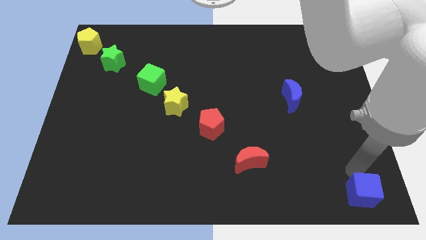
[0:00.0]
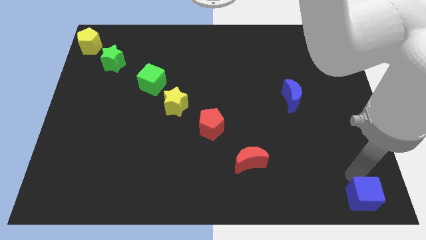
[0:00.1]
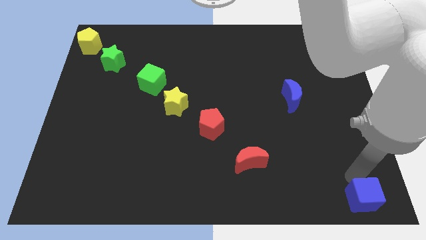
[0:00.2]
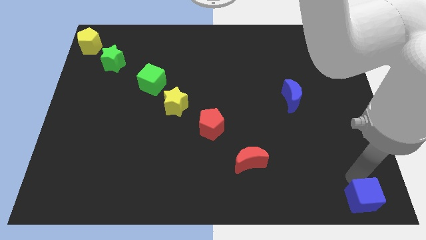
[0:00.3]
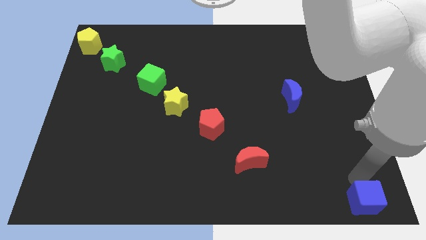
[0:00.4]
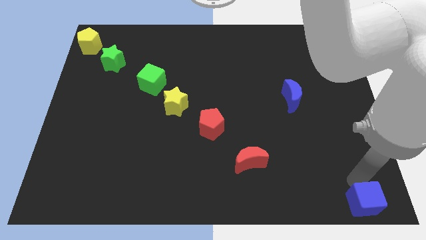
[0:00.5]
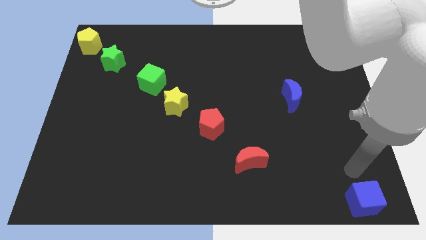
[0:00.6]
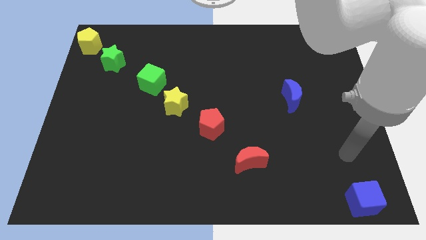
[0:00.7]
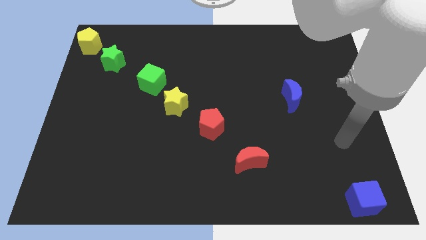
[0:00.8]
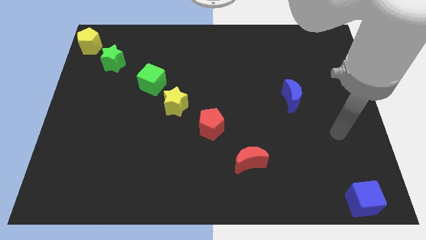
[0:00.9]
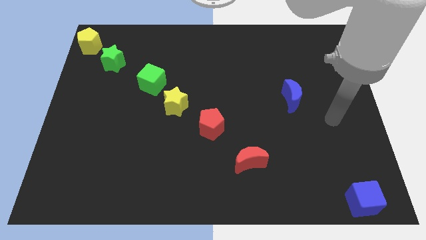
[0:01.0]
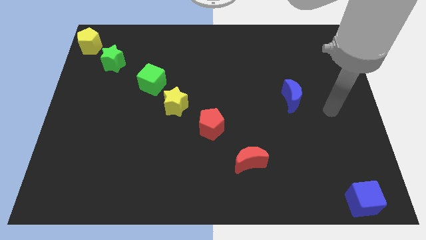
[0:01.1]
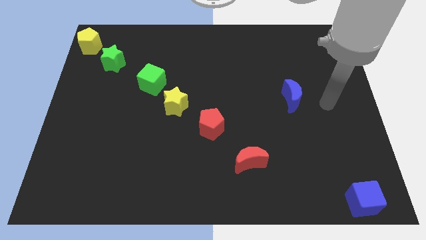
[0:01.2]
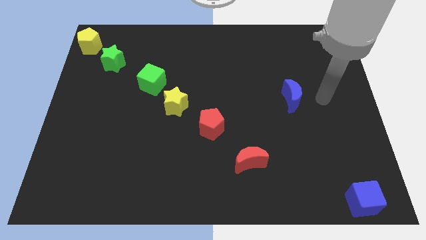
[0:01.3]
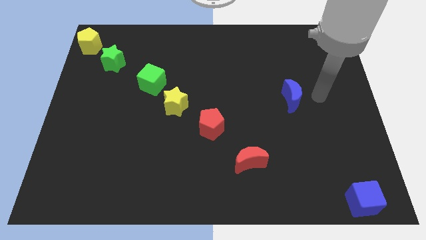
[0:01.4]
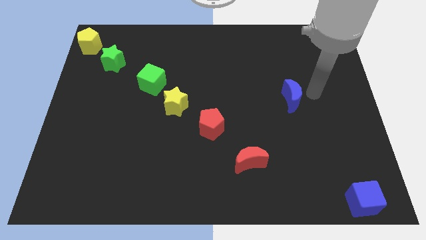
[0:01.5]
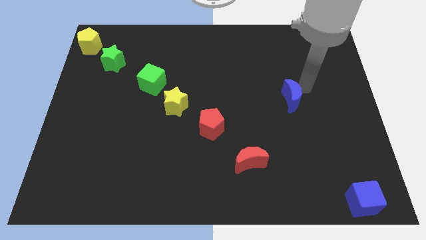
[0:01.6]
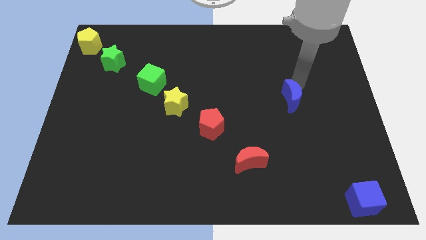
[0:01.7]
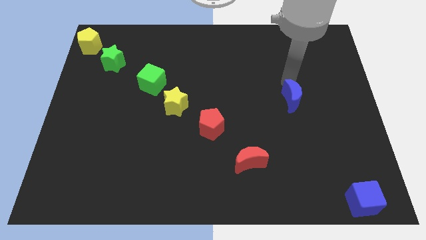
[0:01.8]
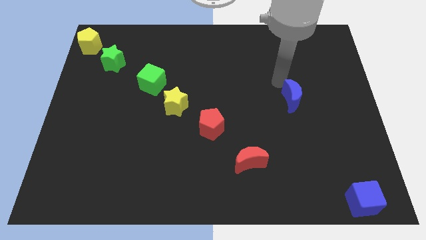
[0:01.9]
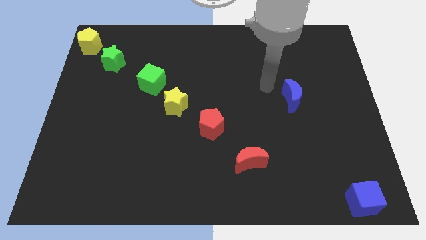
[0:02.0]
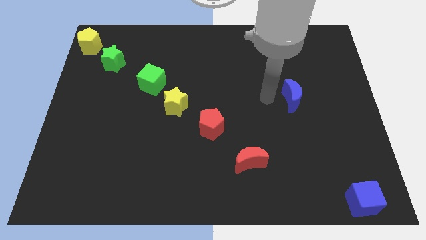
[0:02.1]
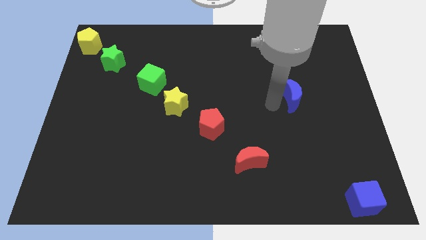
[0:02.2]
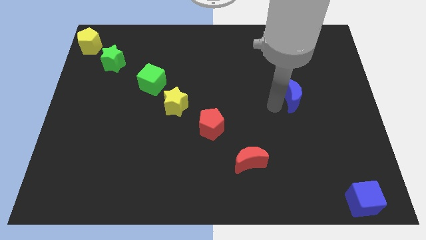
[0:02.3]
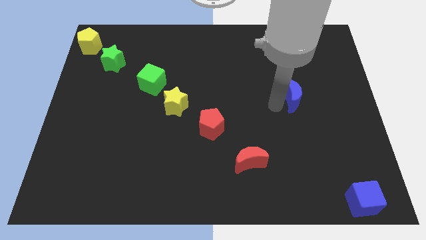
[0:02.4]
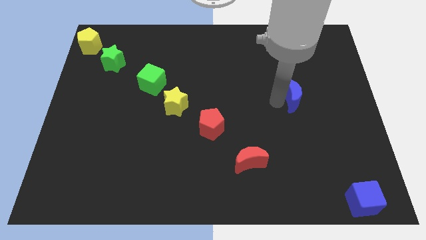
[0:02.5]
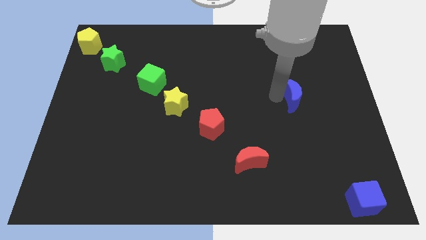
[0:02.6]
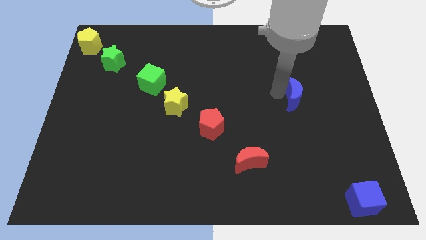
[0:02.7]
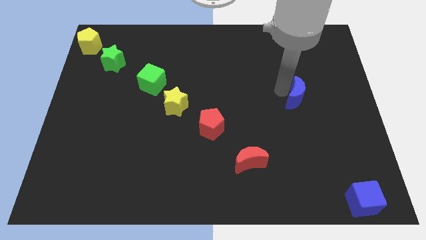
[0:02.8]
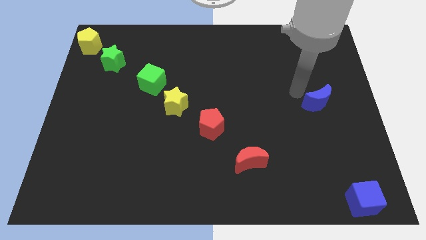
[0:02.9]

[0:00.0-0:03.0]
move your arm to the blue moon

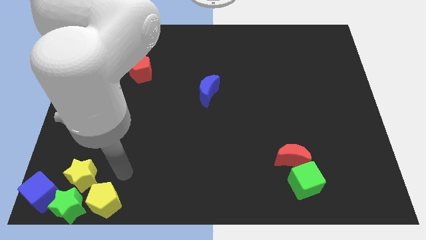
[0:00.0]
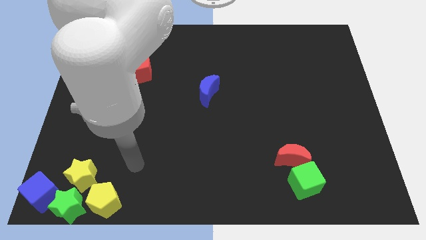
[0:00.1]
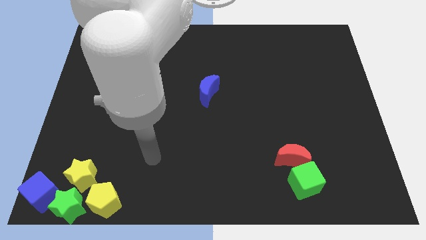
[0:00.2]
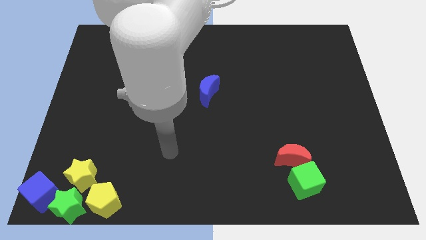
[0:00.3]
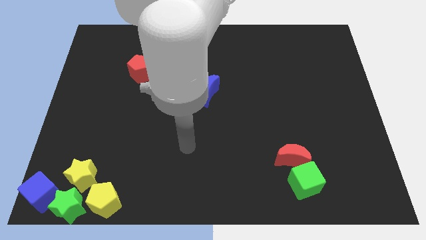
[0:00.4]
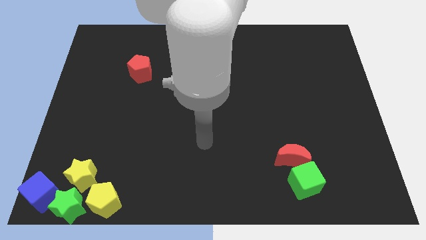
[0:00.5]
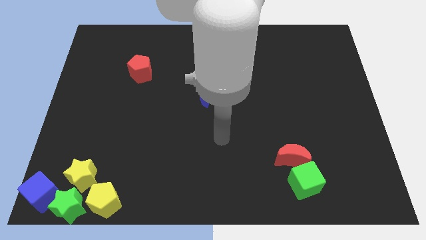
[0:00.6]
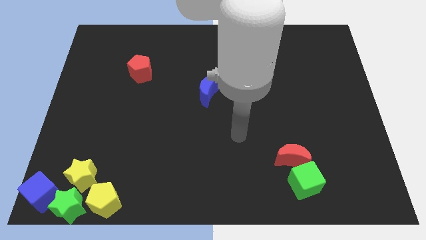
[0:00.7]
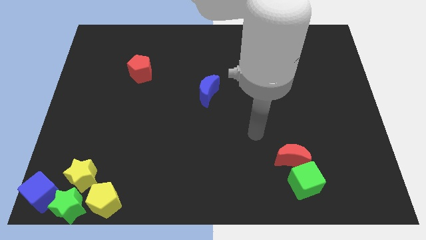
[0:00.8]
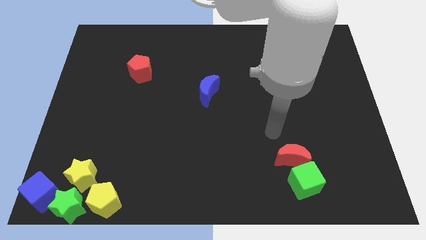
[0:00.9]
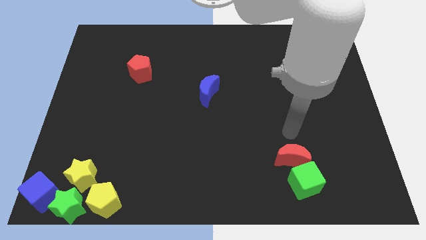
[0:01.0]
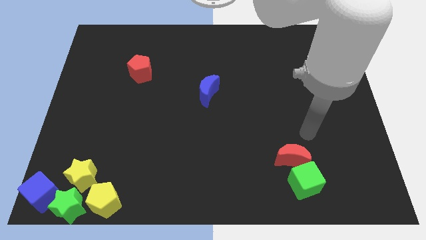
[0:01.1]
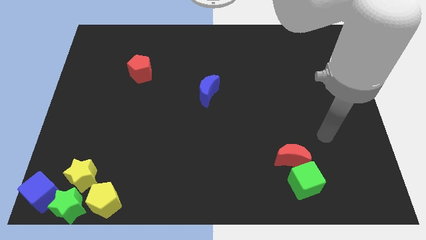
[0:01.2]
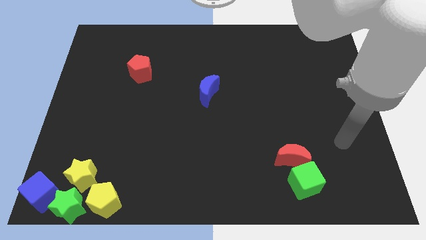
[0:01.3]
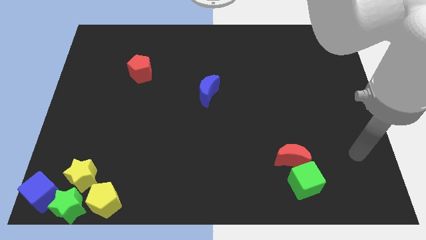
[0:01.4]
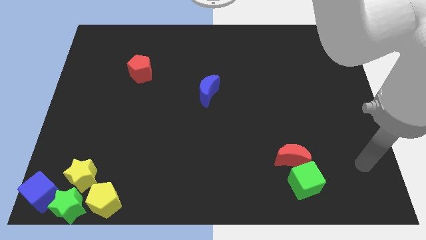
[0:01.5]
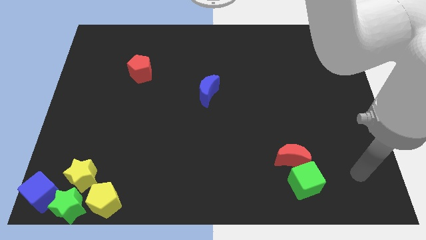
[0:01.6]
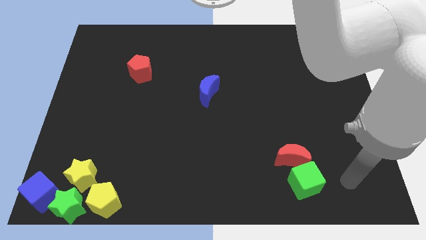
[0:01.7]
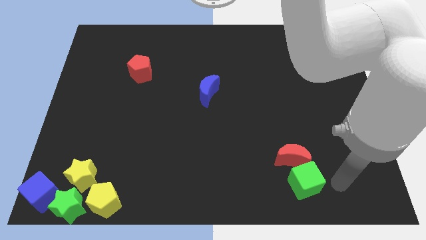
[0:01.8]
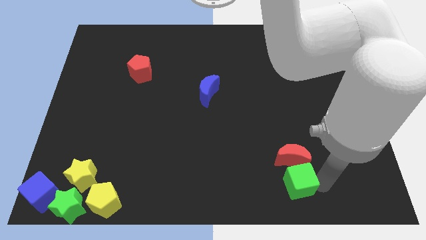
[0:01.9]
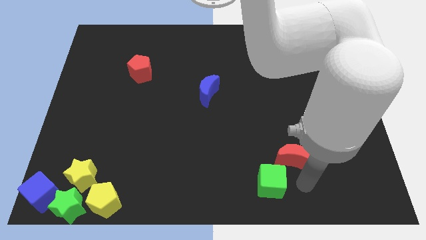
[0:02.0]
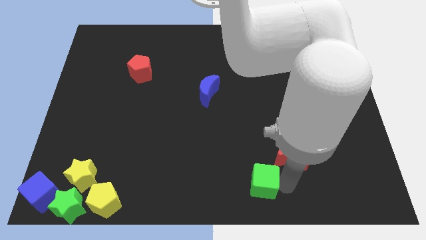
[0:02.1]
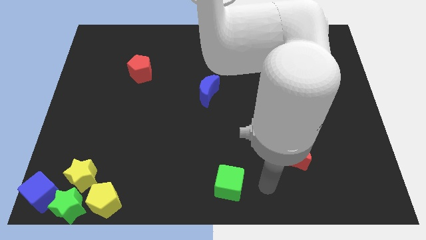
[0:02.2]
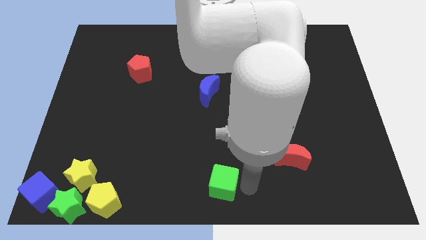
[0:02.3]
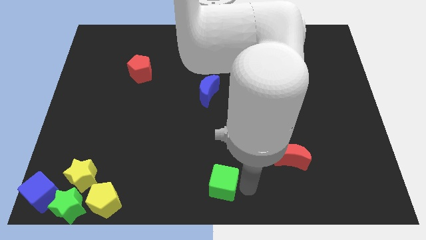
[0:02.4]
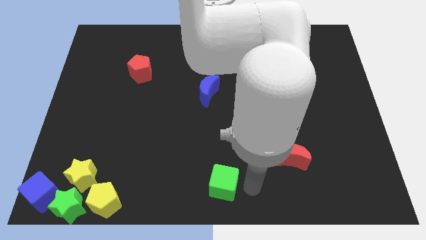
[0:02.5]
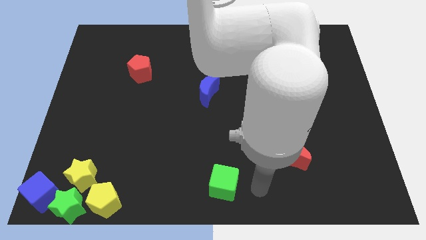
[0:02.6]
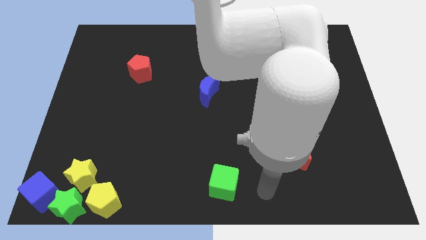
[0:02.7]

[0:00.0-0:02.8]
push the green cube to the bottom center of the board

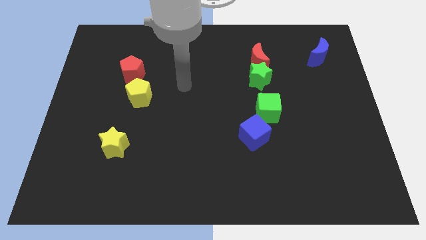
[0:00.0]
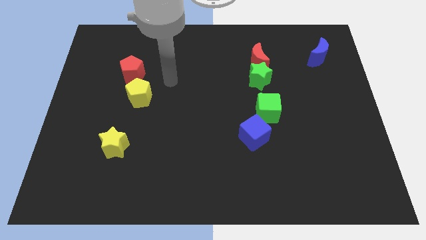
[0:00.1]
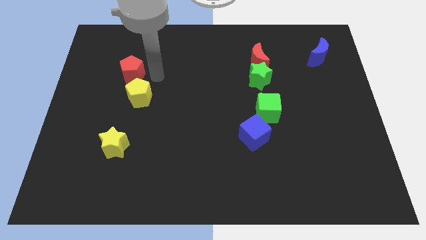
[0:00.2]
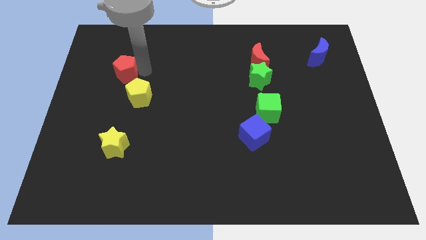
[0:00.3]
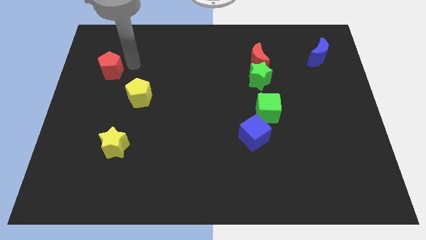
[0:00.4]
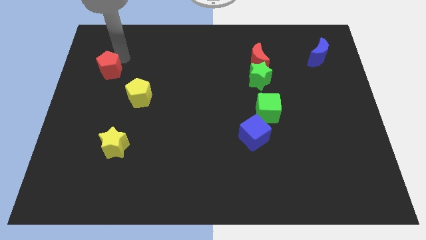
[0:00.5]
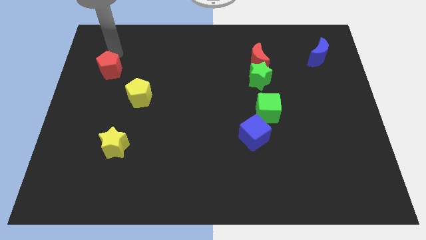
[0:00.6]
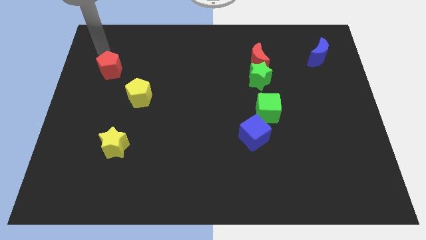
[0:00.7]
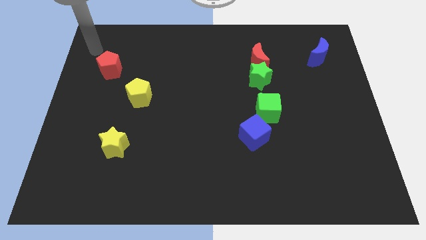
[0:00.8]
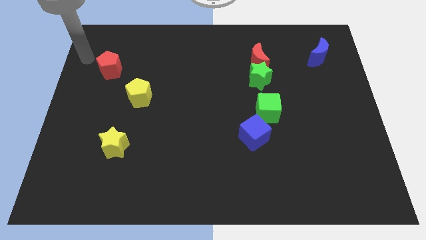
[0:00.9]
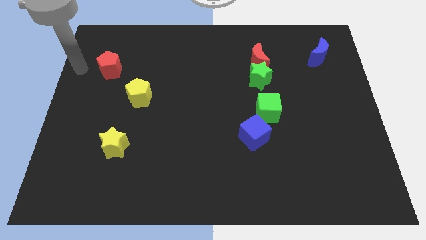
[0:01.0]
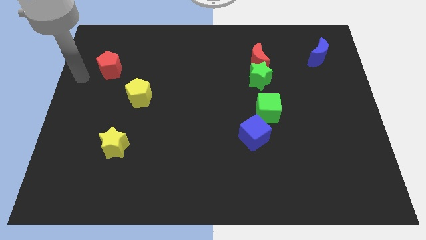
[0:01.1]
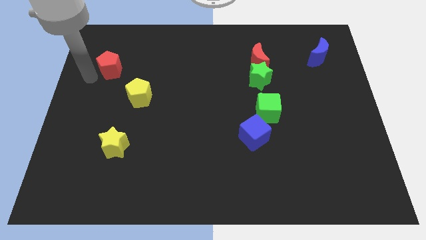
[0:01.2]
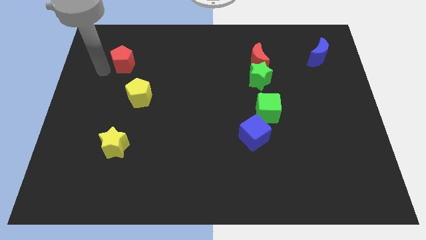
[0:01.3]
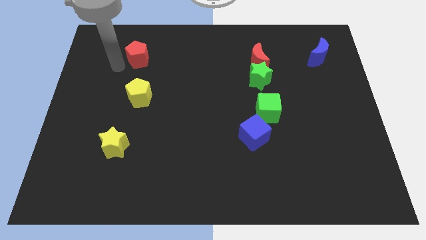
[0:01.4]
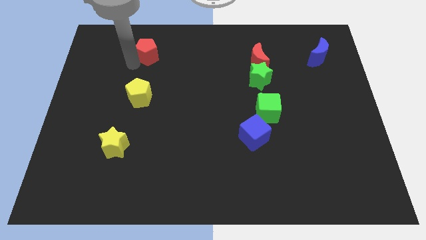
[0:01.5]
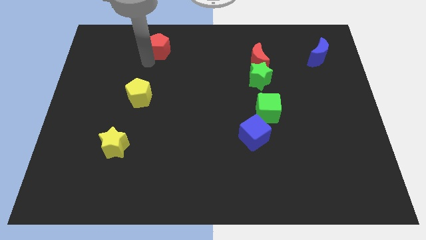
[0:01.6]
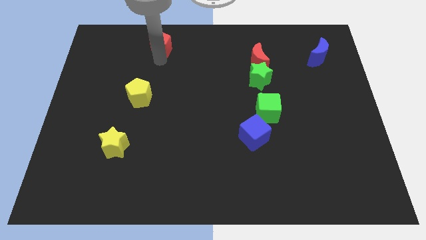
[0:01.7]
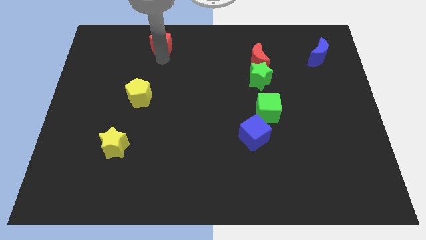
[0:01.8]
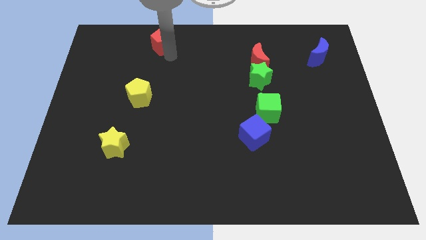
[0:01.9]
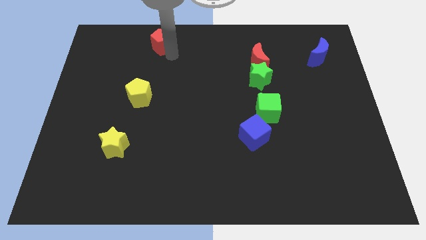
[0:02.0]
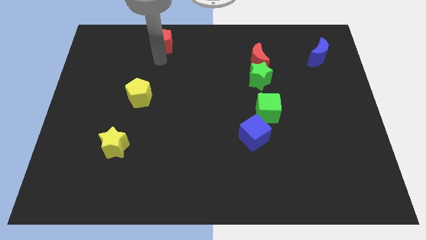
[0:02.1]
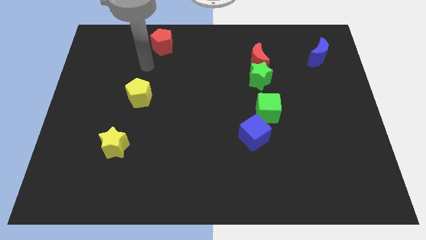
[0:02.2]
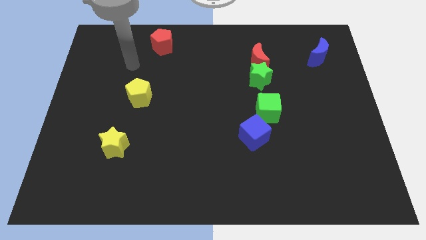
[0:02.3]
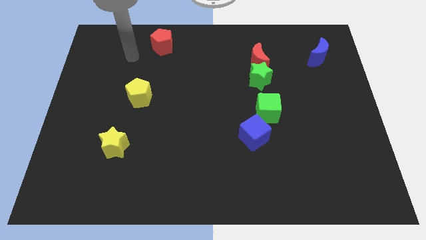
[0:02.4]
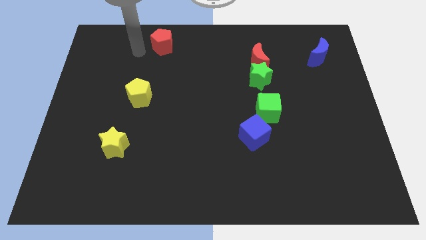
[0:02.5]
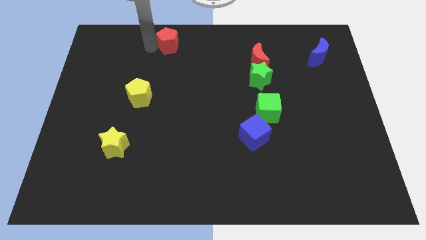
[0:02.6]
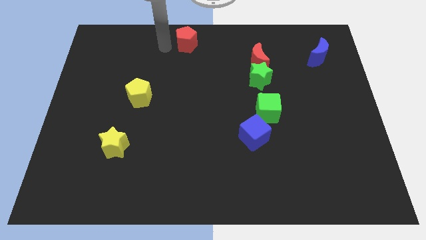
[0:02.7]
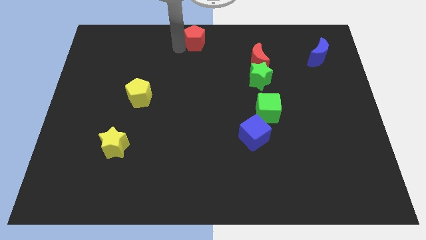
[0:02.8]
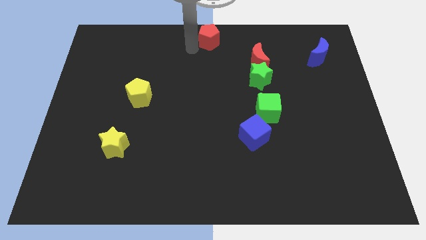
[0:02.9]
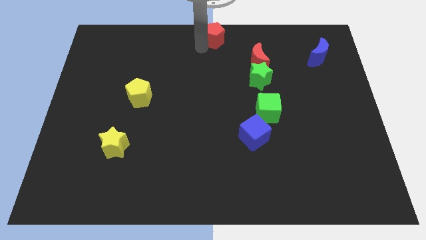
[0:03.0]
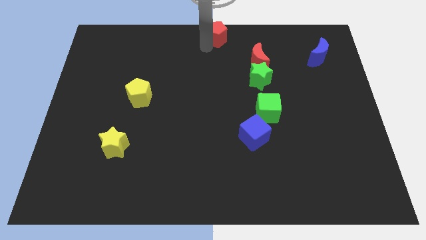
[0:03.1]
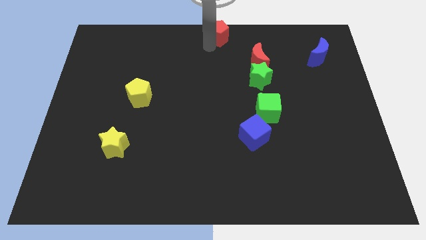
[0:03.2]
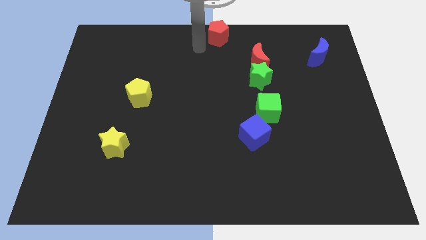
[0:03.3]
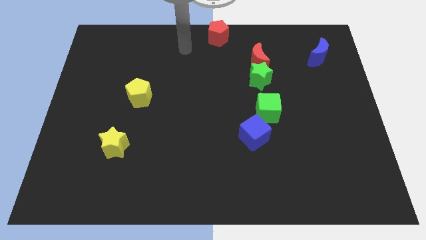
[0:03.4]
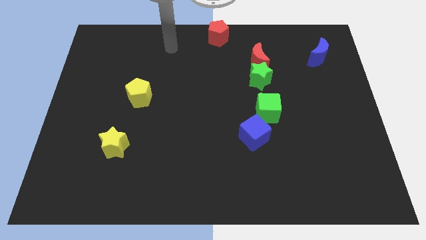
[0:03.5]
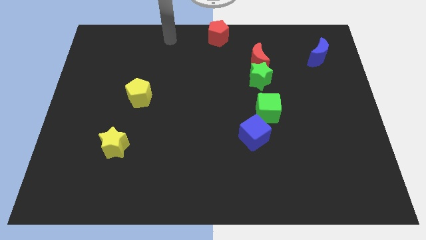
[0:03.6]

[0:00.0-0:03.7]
place the red pentagon at the top center of the board
